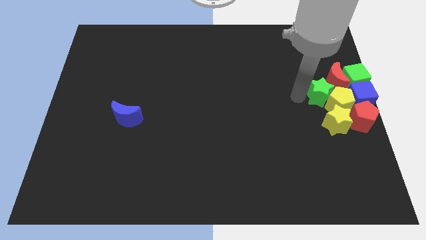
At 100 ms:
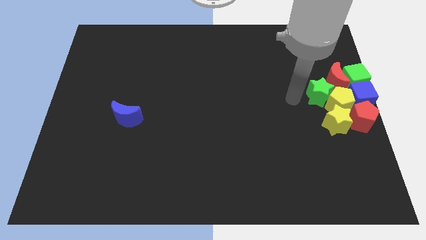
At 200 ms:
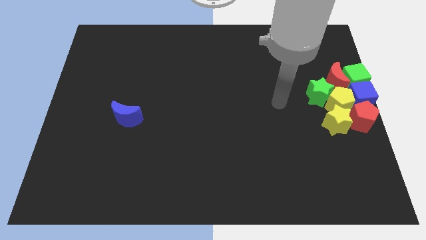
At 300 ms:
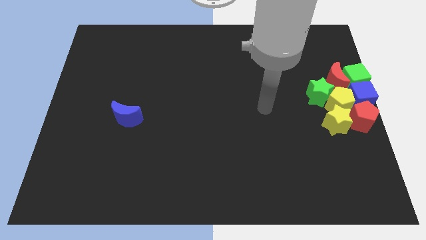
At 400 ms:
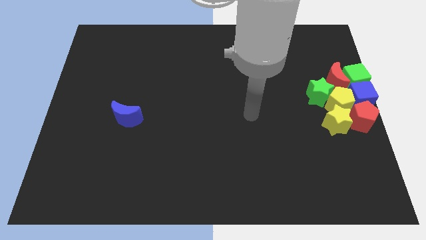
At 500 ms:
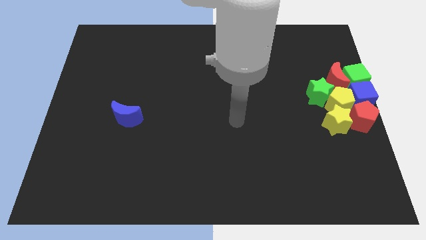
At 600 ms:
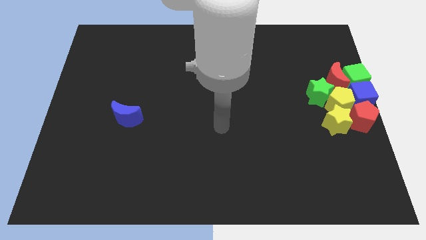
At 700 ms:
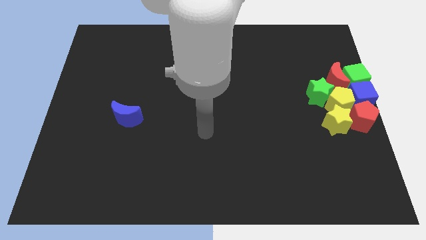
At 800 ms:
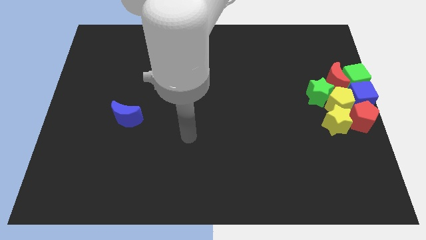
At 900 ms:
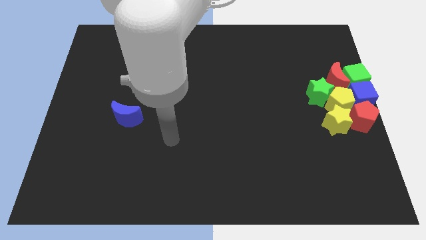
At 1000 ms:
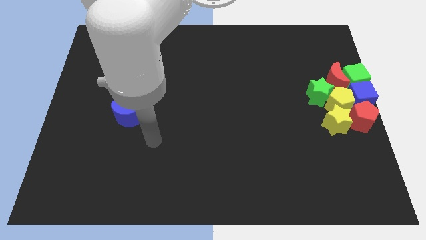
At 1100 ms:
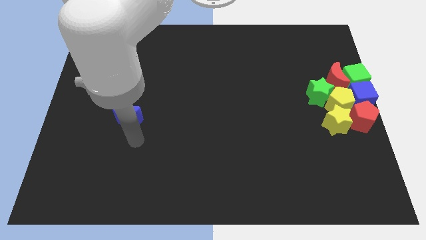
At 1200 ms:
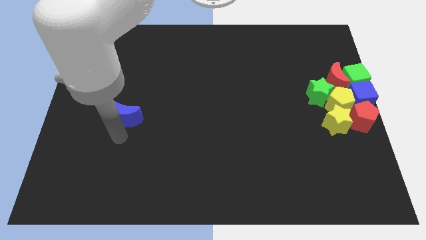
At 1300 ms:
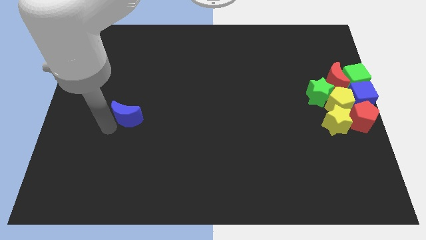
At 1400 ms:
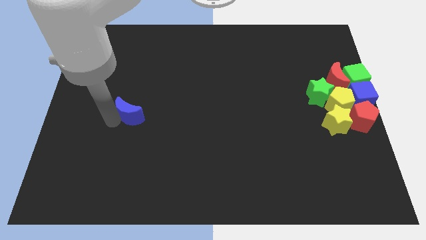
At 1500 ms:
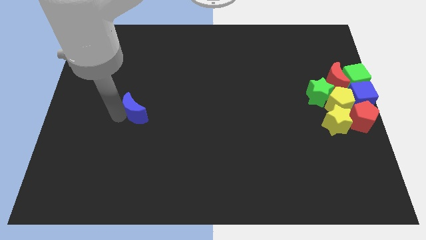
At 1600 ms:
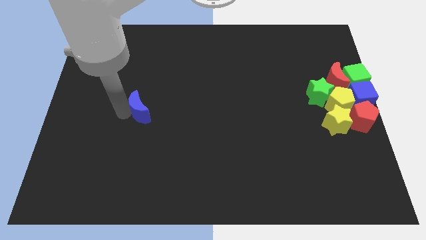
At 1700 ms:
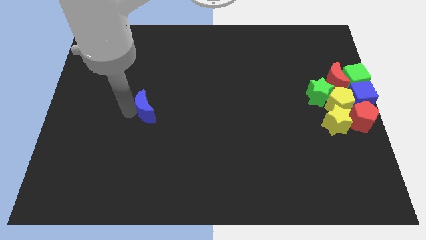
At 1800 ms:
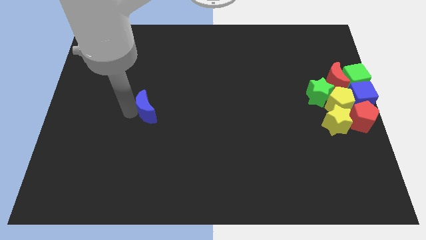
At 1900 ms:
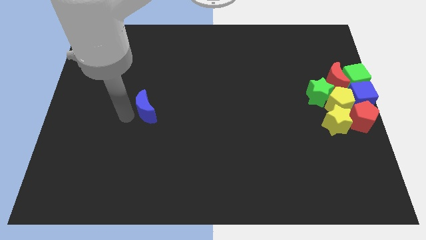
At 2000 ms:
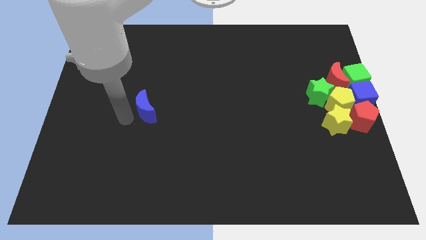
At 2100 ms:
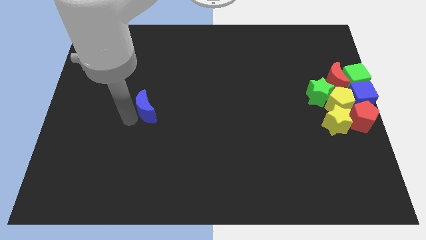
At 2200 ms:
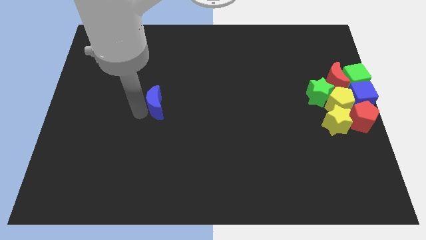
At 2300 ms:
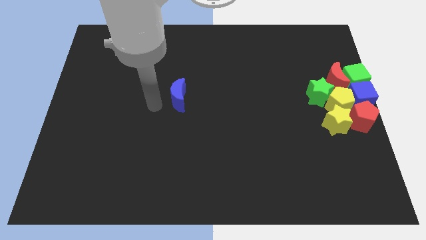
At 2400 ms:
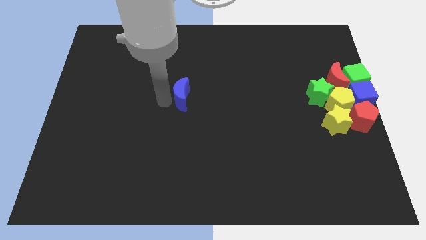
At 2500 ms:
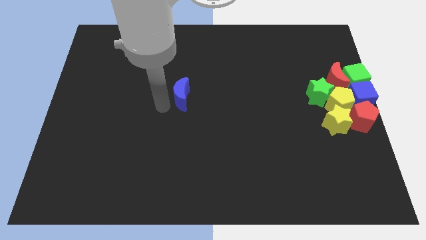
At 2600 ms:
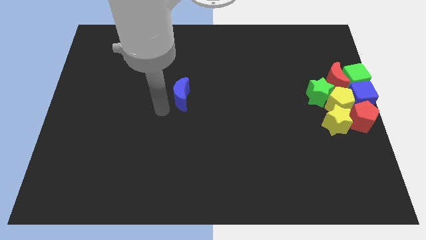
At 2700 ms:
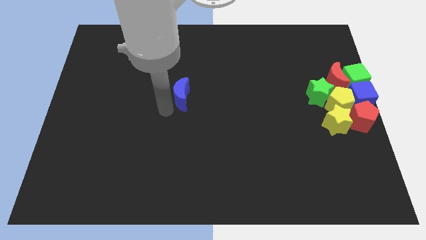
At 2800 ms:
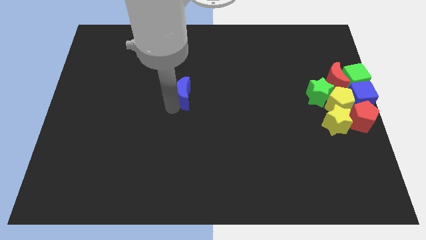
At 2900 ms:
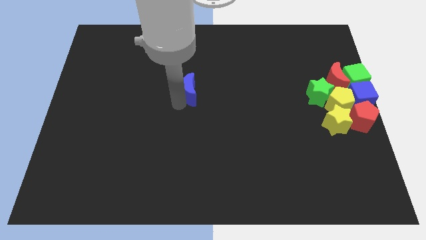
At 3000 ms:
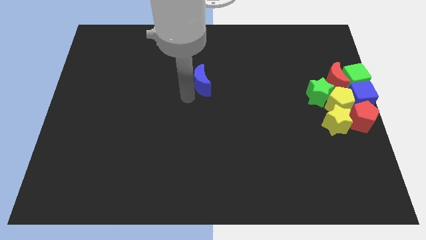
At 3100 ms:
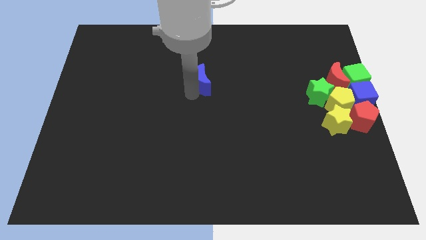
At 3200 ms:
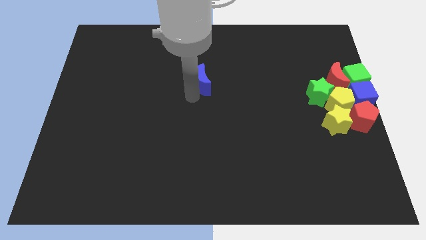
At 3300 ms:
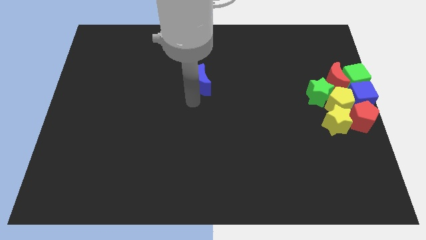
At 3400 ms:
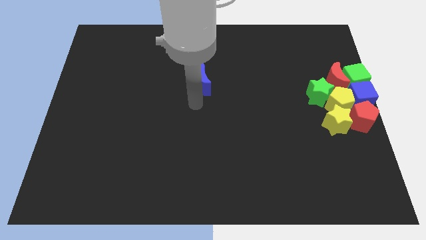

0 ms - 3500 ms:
move the blue crescent diagonal to the yellow star

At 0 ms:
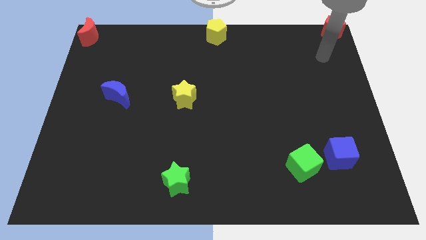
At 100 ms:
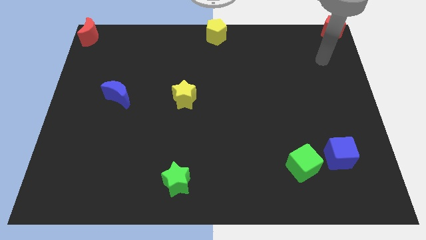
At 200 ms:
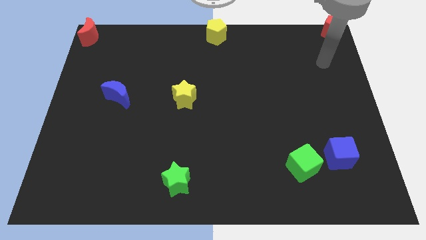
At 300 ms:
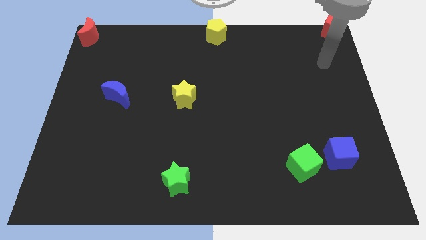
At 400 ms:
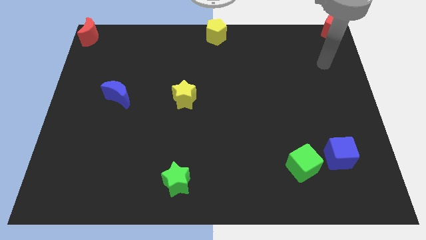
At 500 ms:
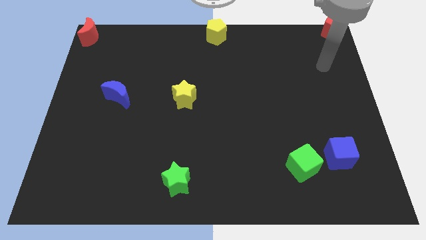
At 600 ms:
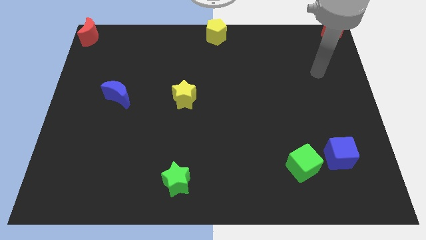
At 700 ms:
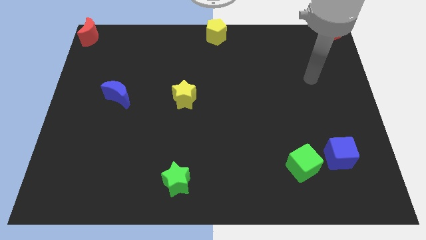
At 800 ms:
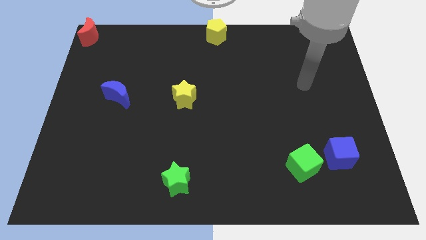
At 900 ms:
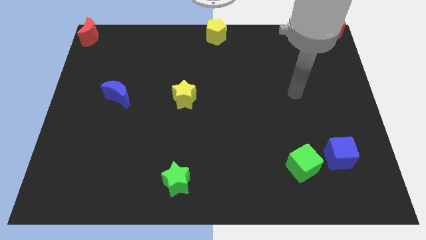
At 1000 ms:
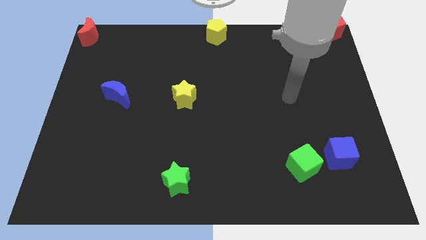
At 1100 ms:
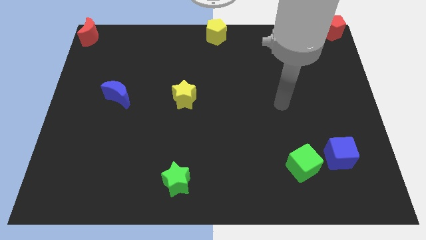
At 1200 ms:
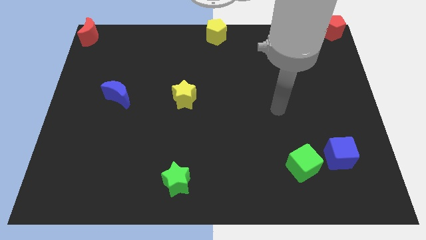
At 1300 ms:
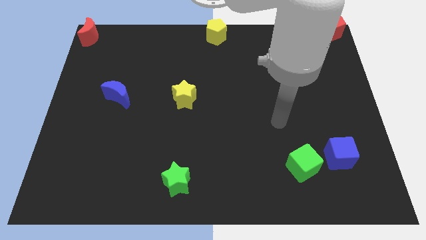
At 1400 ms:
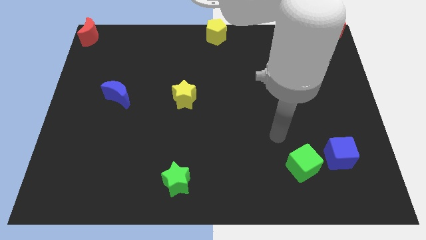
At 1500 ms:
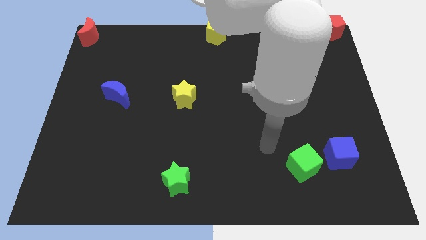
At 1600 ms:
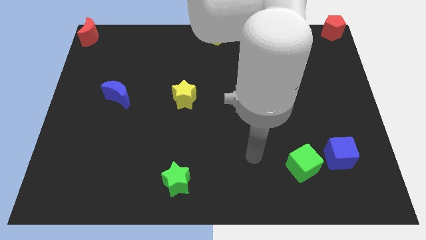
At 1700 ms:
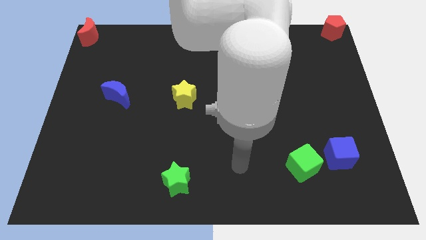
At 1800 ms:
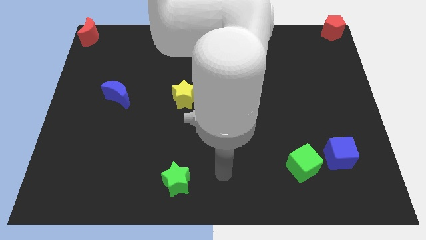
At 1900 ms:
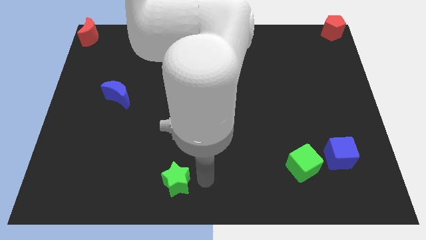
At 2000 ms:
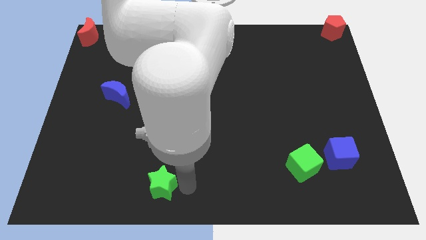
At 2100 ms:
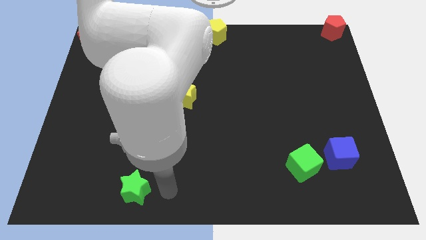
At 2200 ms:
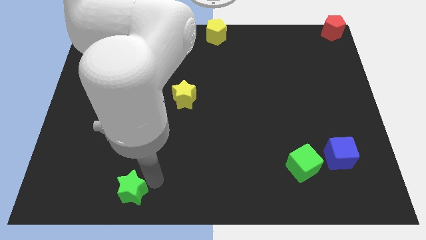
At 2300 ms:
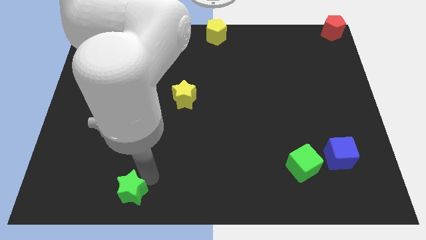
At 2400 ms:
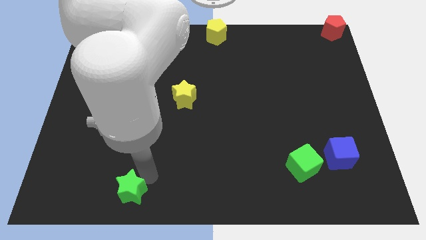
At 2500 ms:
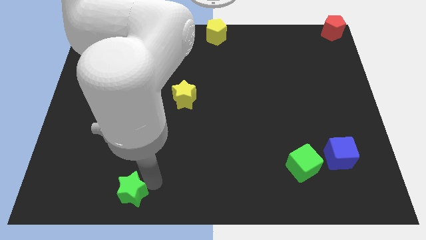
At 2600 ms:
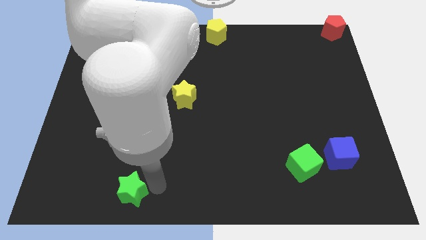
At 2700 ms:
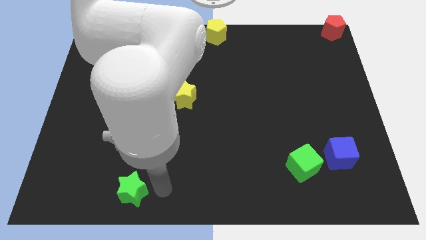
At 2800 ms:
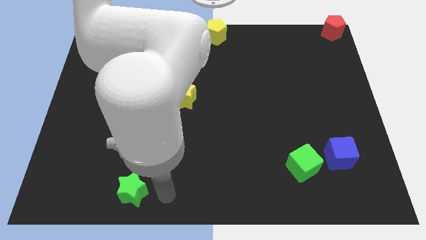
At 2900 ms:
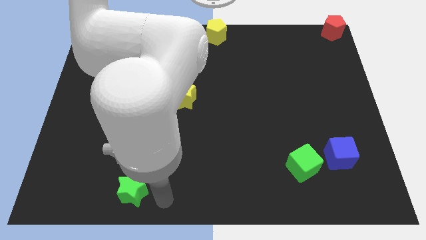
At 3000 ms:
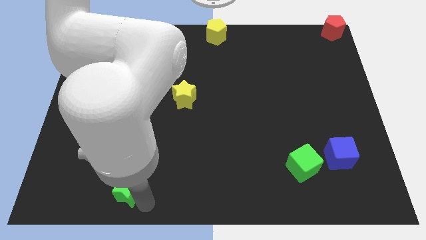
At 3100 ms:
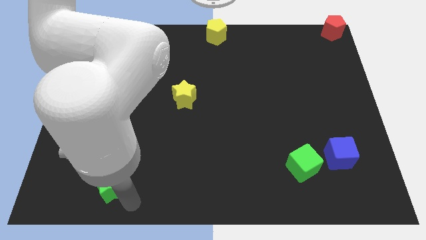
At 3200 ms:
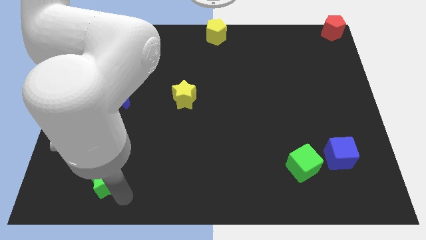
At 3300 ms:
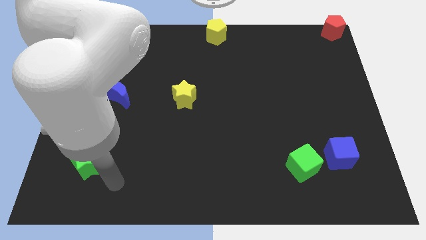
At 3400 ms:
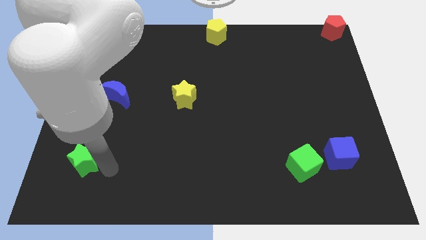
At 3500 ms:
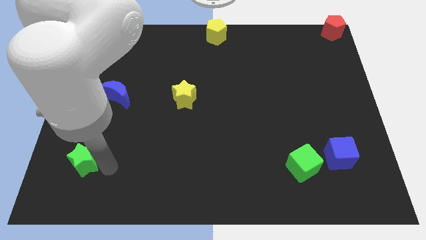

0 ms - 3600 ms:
move the green star to the left of the board

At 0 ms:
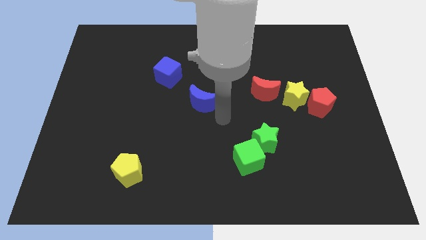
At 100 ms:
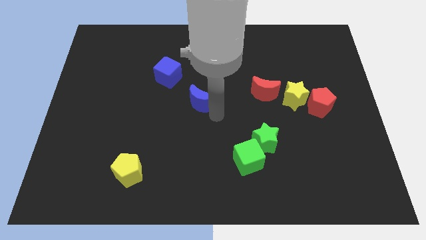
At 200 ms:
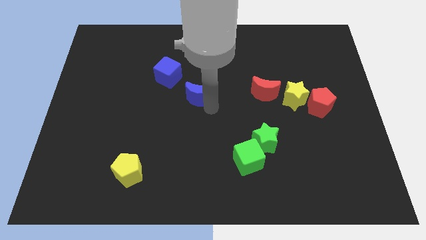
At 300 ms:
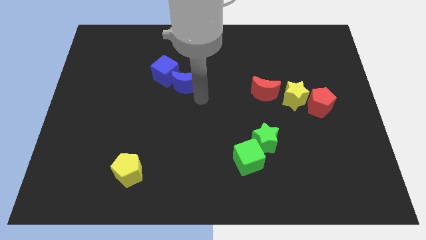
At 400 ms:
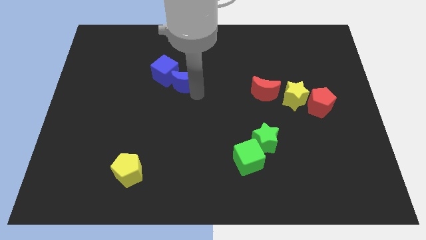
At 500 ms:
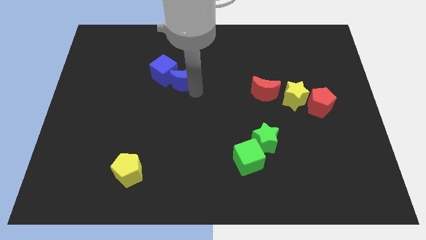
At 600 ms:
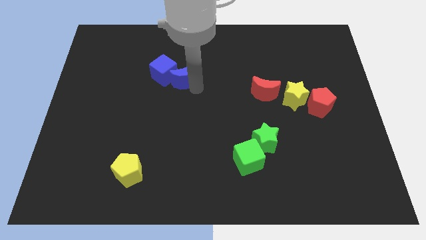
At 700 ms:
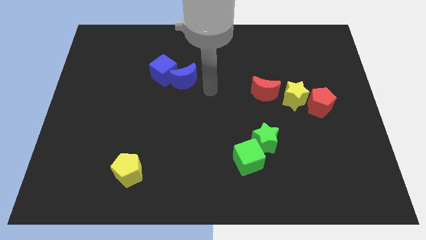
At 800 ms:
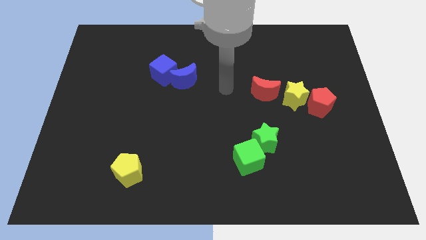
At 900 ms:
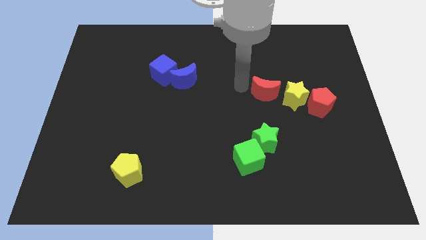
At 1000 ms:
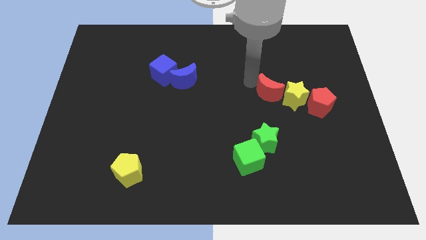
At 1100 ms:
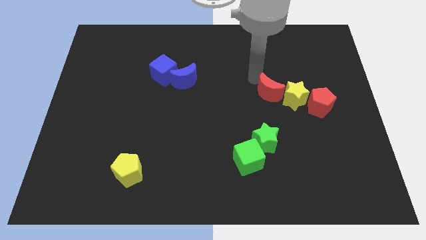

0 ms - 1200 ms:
push blue crescent into the blue cube

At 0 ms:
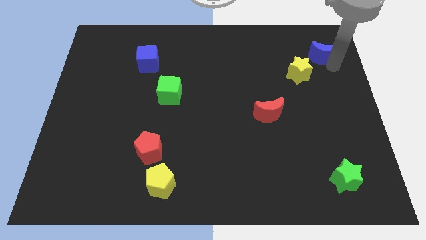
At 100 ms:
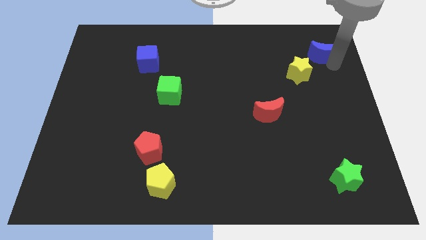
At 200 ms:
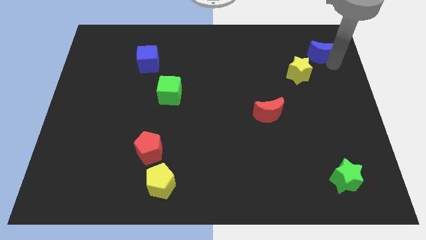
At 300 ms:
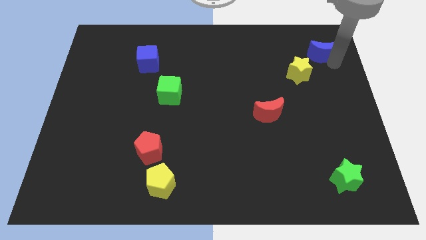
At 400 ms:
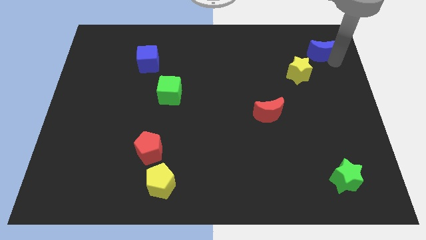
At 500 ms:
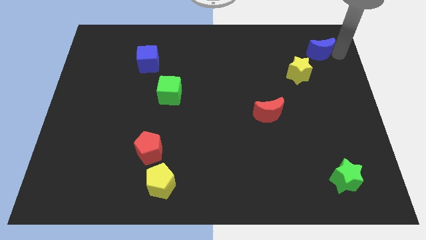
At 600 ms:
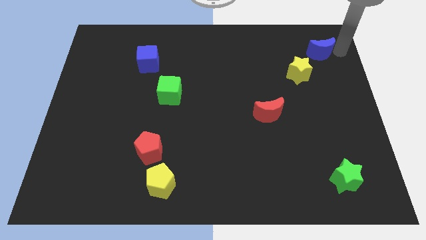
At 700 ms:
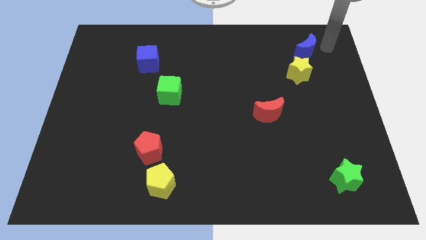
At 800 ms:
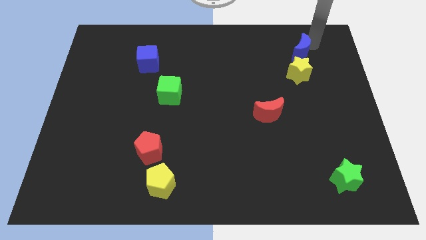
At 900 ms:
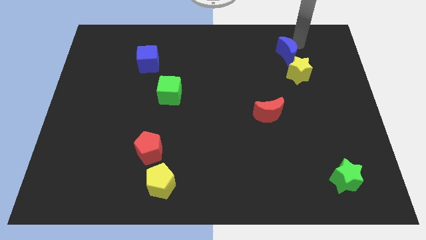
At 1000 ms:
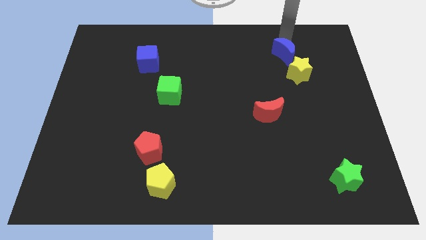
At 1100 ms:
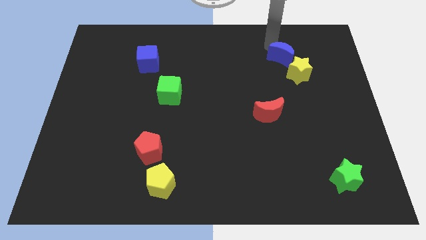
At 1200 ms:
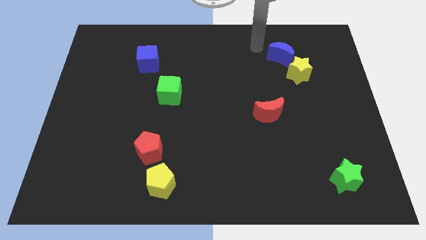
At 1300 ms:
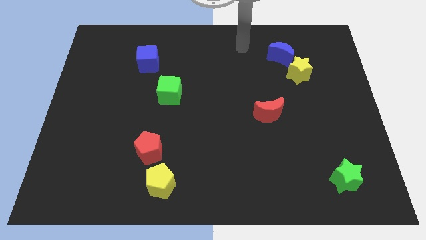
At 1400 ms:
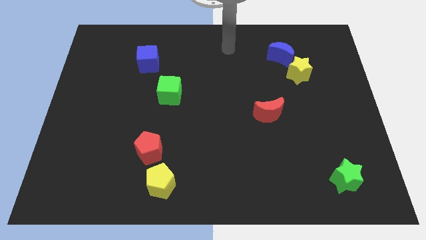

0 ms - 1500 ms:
move the blue moon slightly to the left
